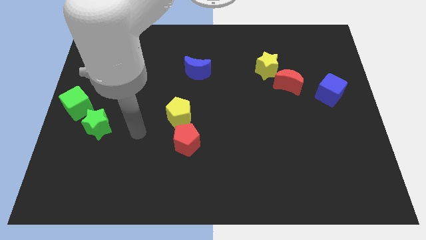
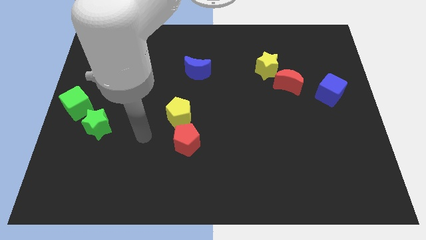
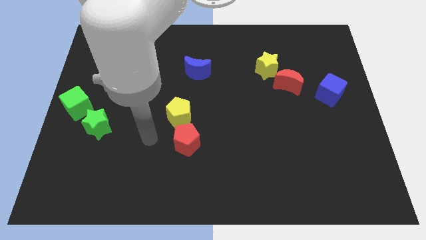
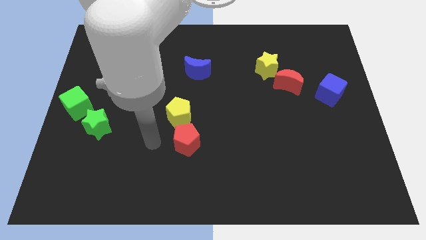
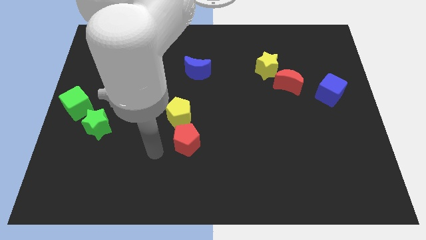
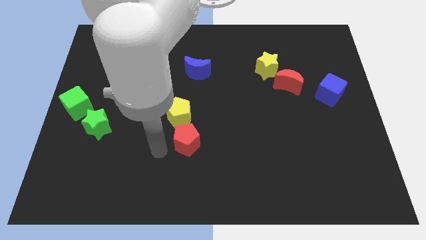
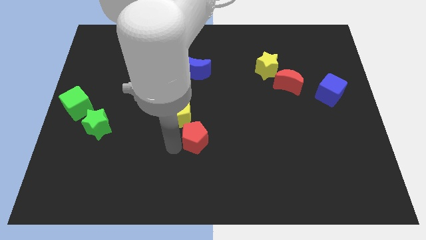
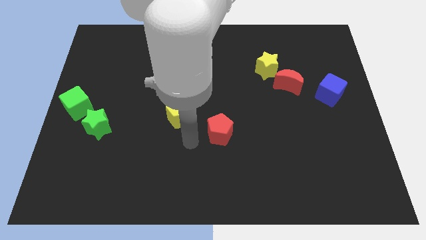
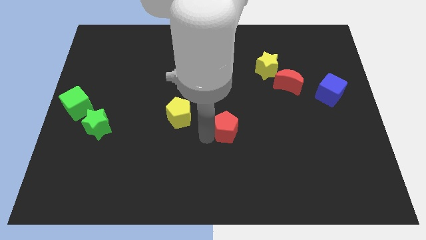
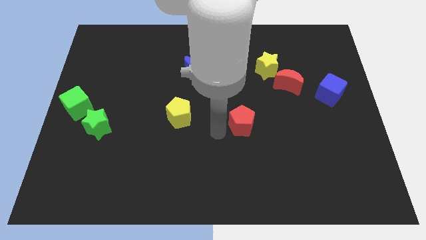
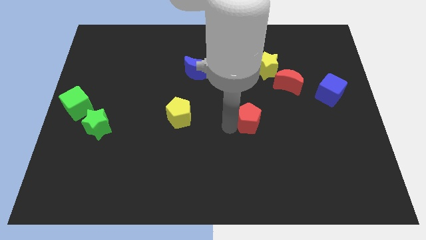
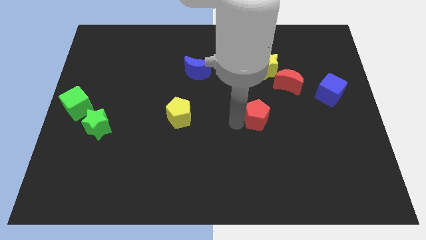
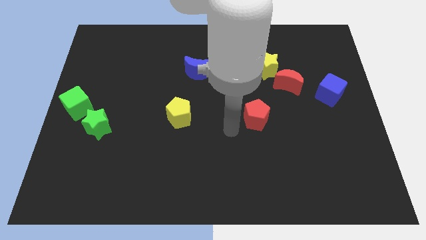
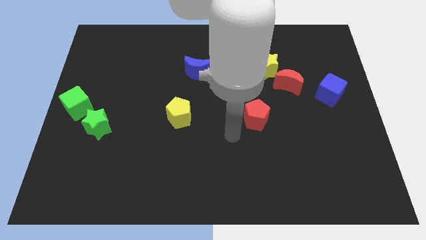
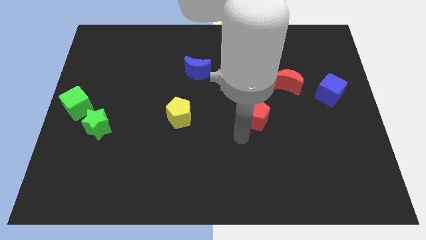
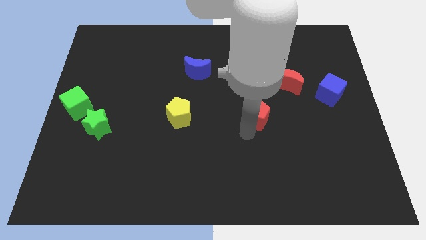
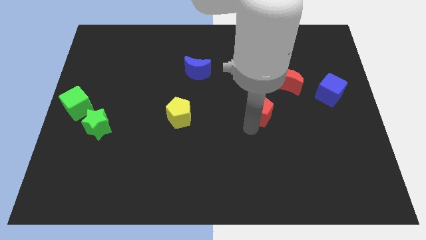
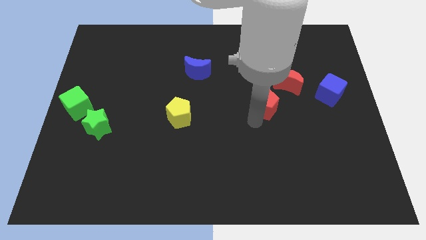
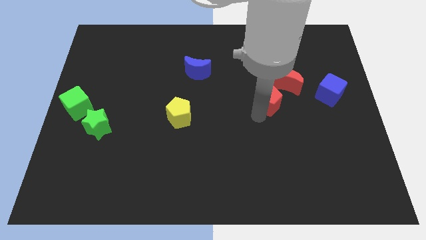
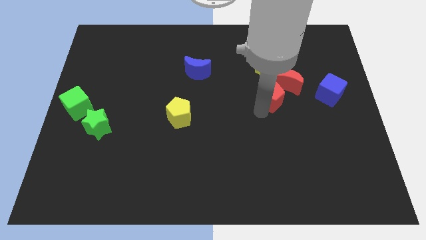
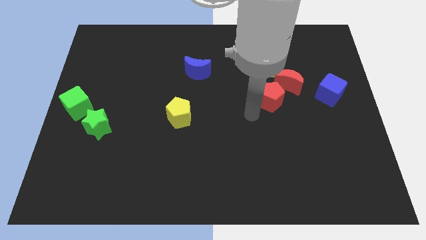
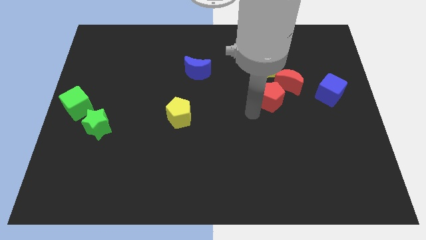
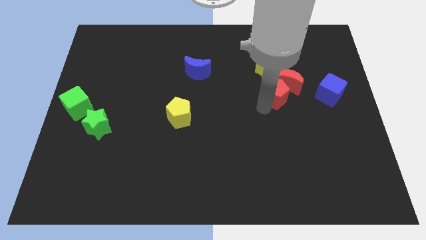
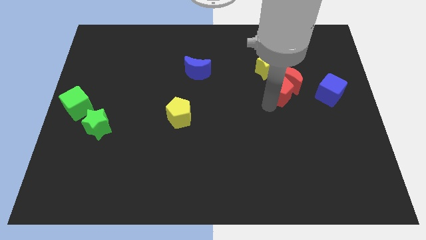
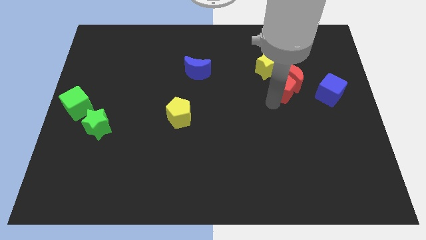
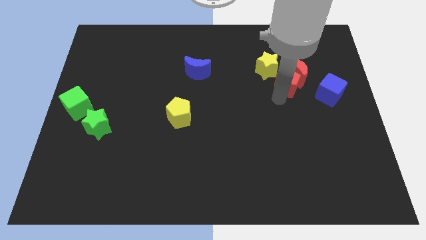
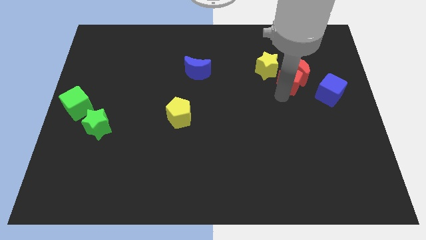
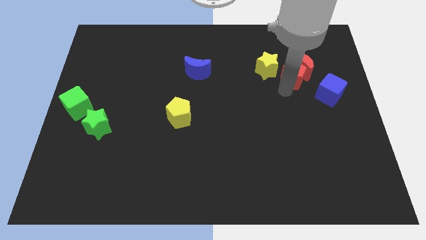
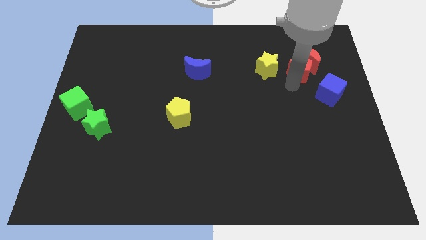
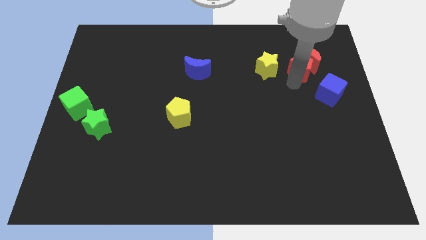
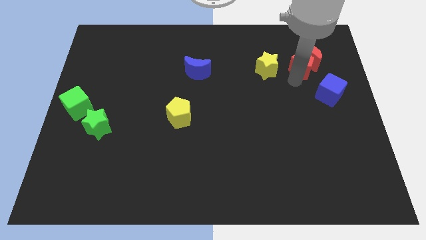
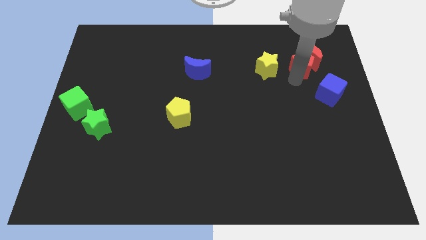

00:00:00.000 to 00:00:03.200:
drag the red pentagon to the bottom left of the red moon

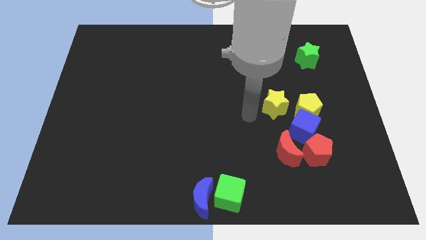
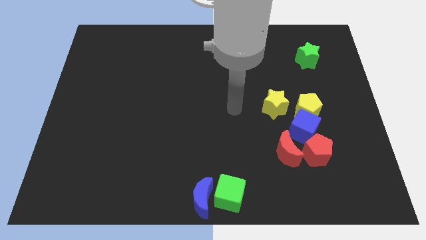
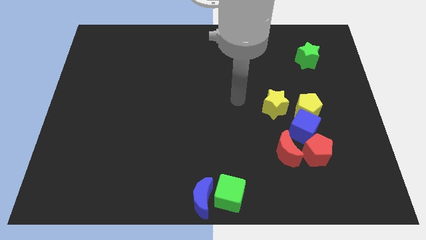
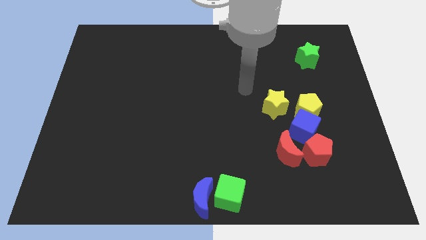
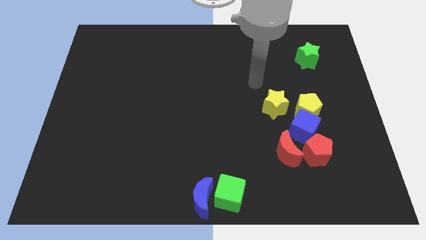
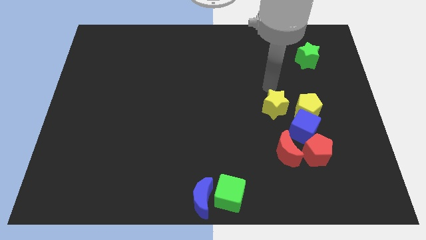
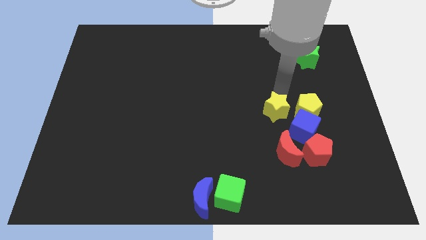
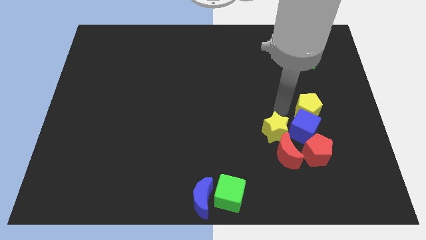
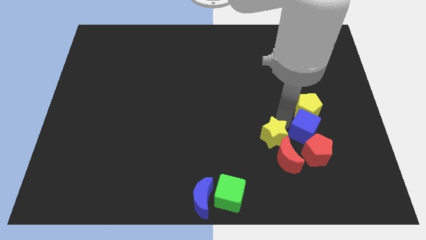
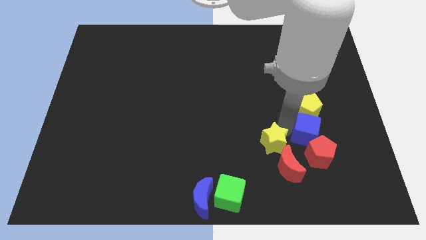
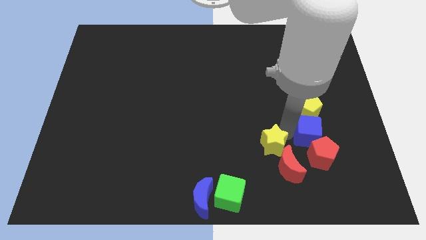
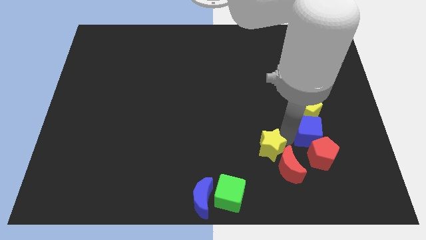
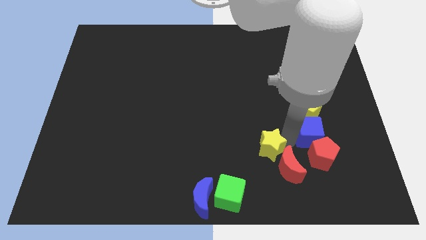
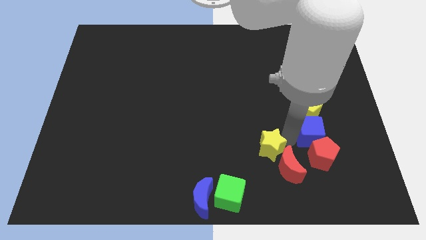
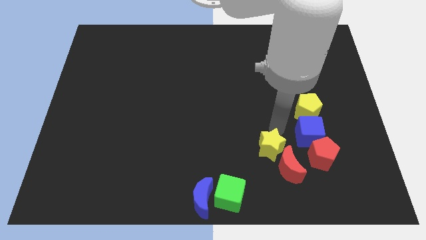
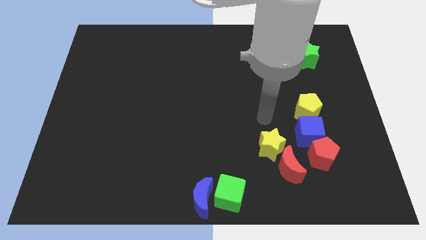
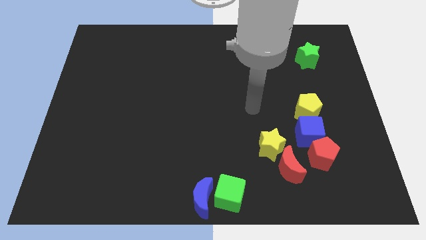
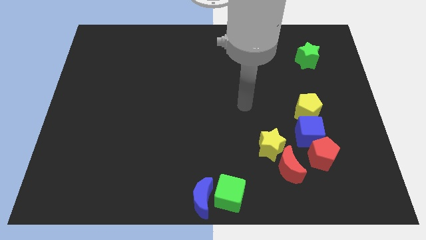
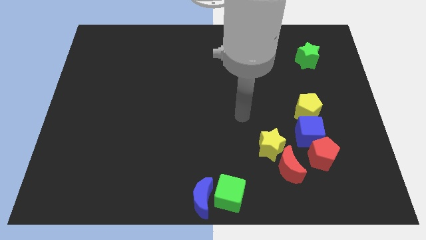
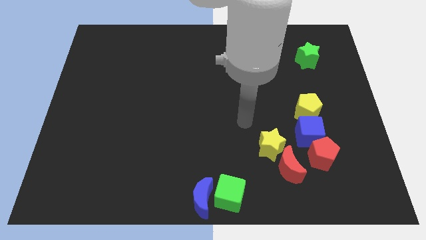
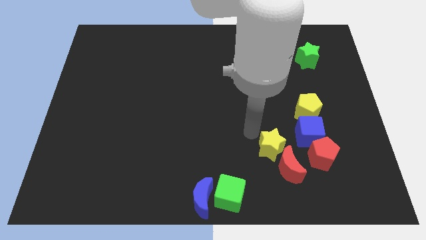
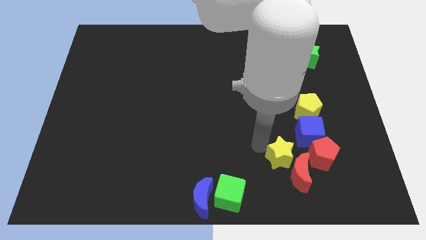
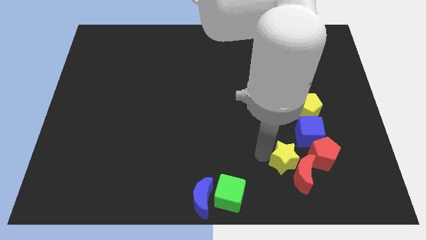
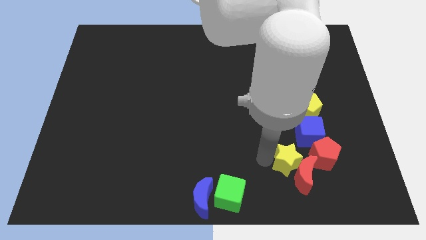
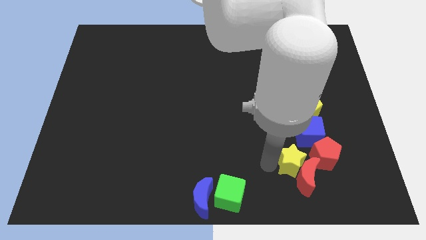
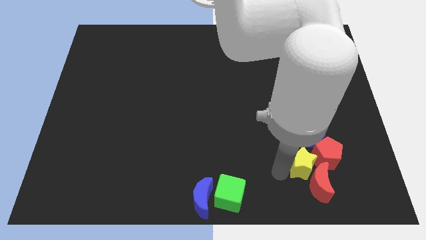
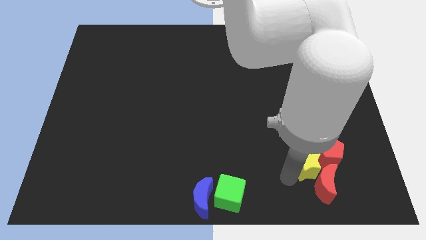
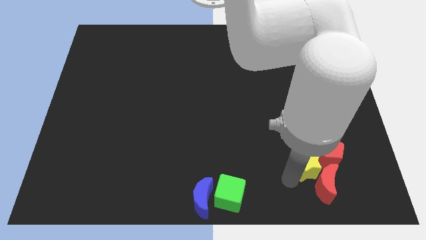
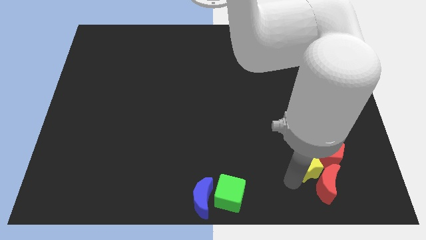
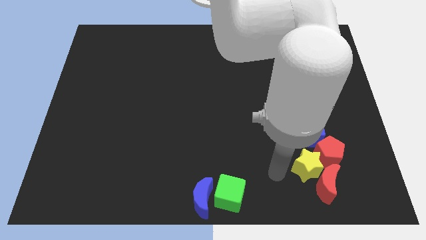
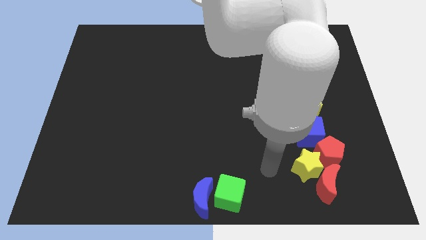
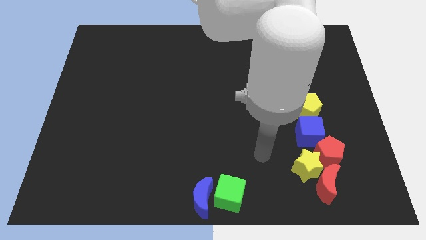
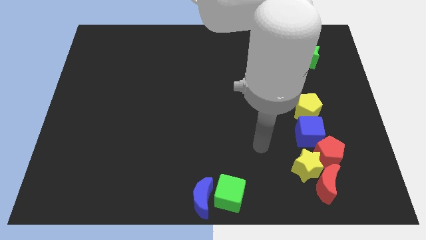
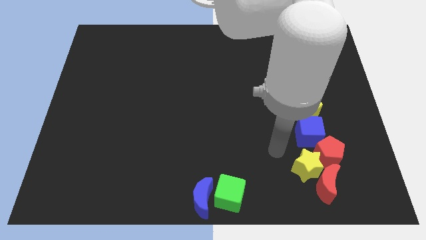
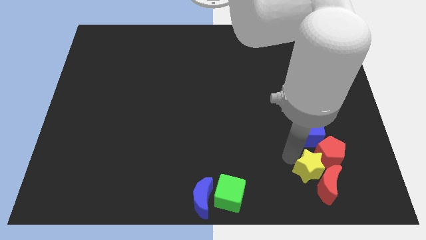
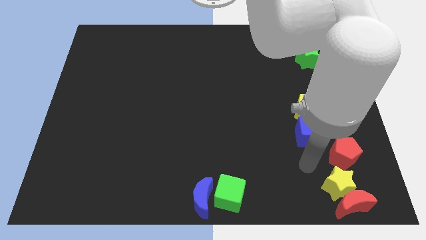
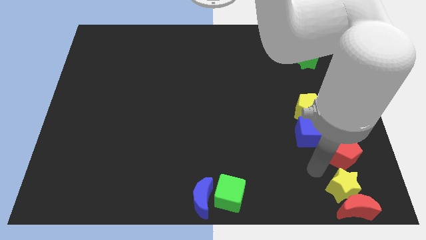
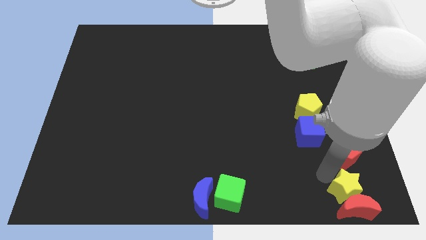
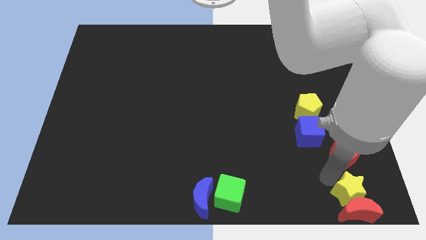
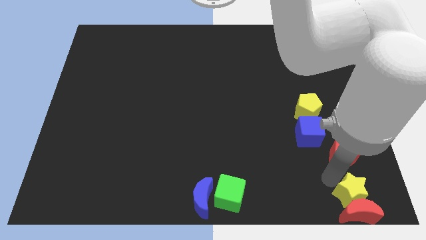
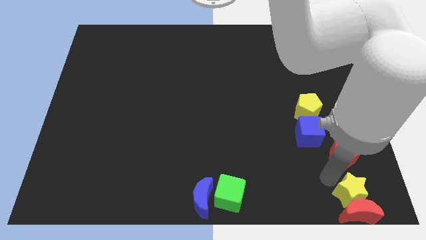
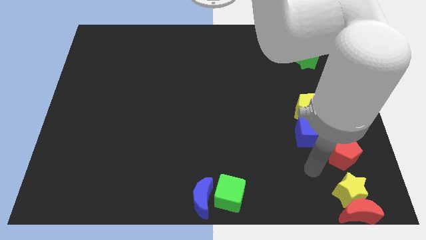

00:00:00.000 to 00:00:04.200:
move yellow star and the red crescent to the bottom of the board

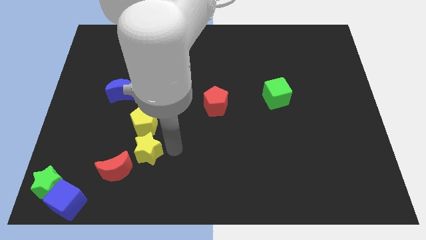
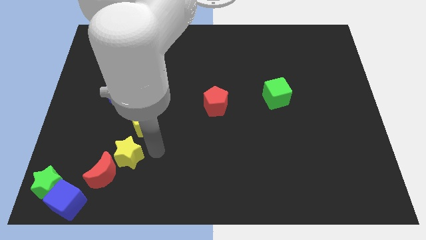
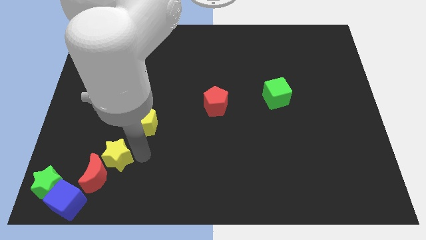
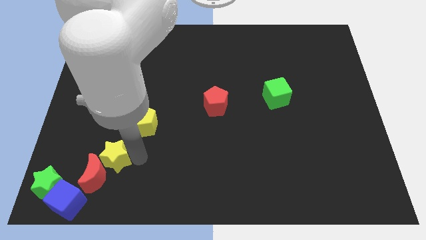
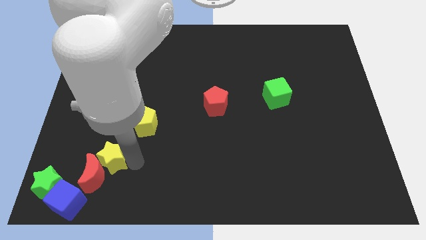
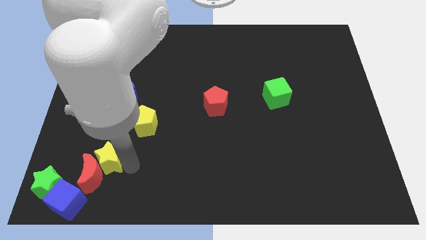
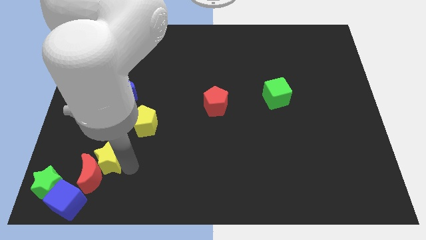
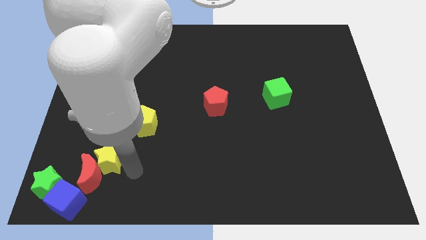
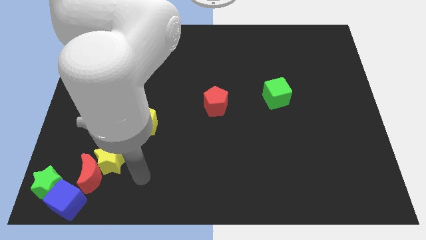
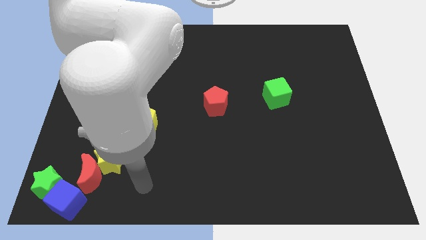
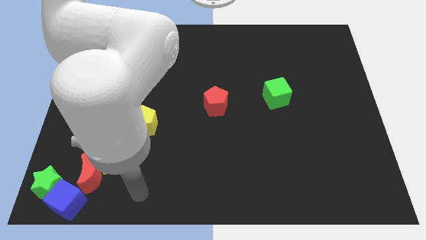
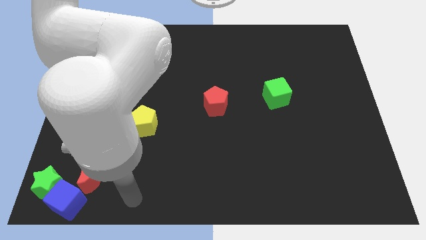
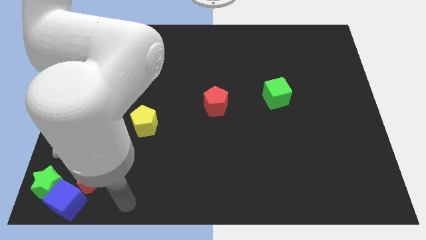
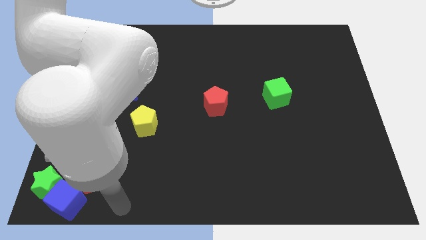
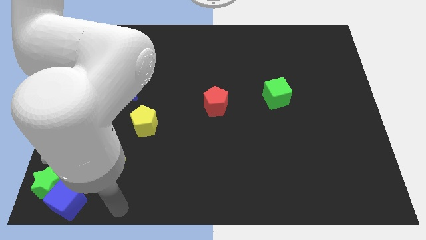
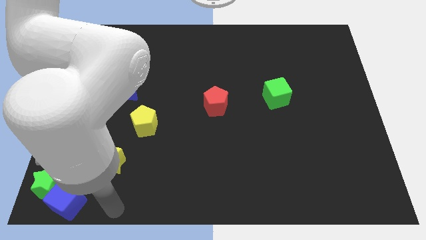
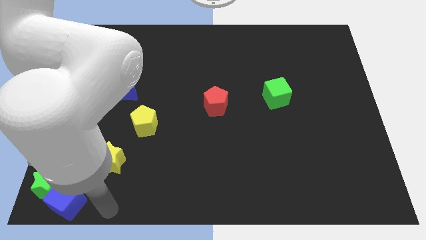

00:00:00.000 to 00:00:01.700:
move red moon and yellow star diagonal to the blue cube
